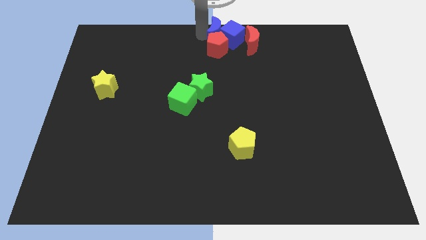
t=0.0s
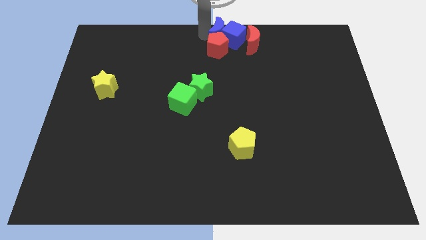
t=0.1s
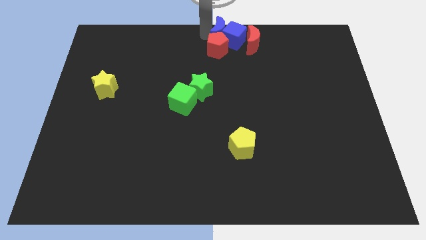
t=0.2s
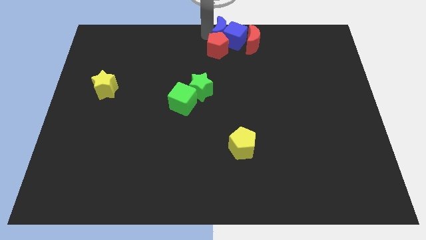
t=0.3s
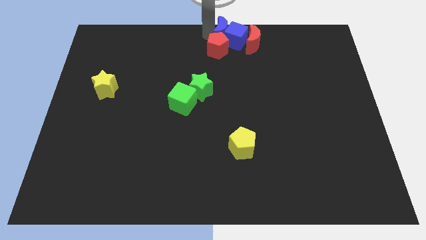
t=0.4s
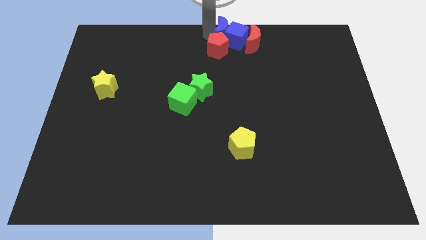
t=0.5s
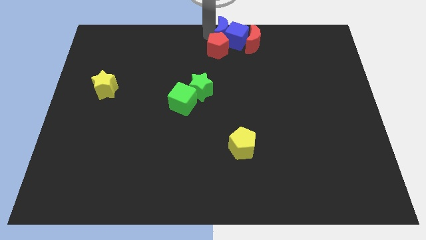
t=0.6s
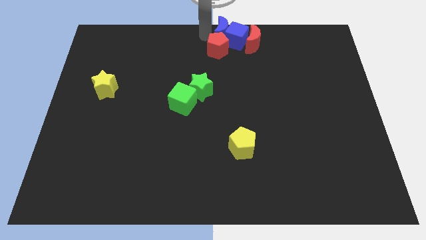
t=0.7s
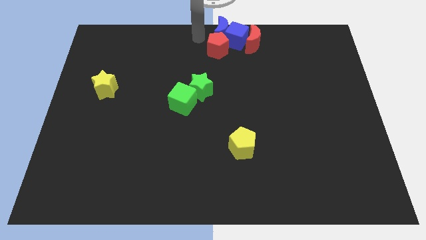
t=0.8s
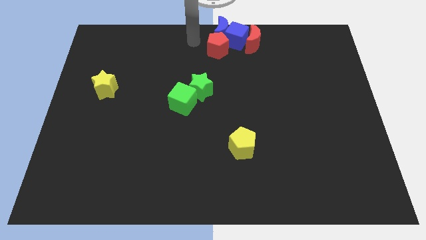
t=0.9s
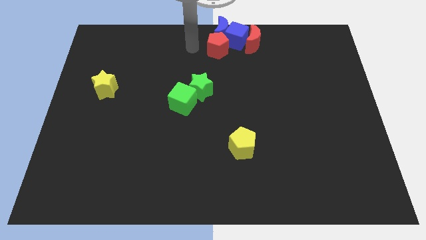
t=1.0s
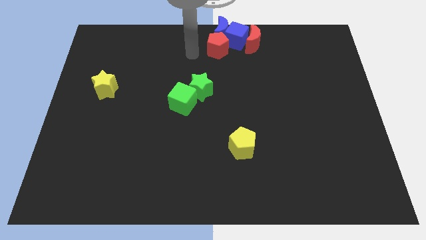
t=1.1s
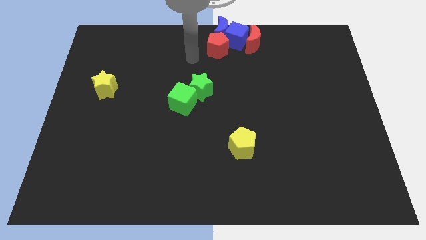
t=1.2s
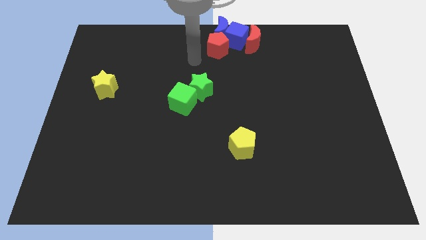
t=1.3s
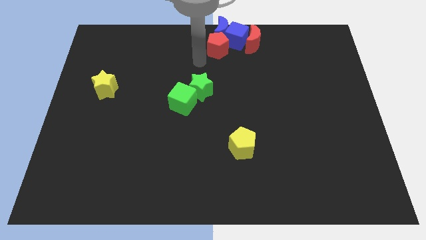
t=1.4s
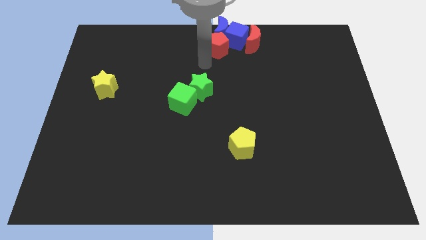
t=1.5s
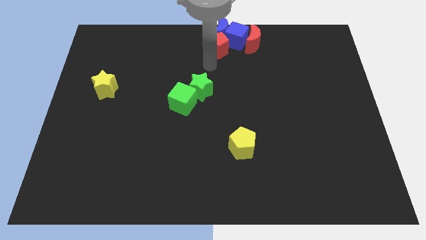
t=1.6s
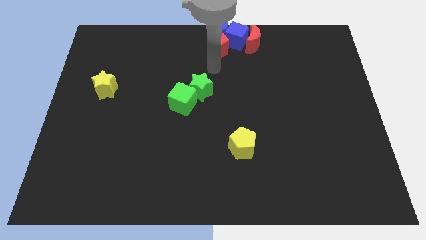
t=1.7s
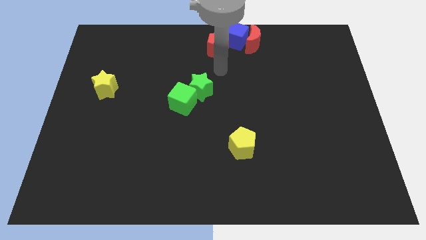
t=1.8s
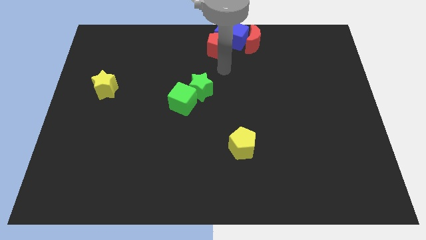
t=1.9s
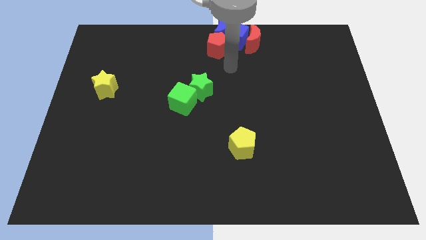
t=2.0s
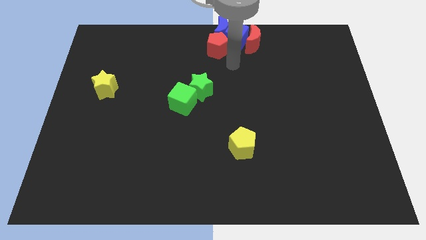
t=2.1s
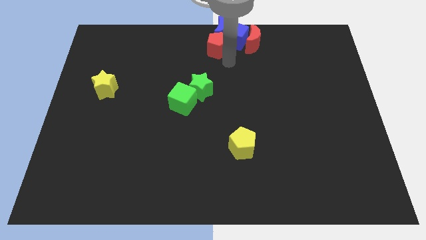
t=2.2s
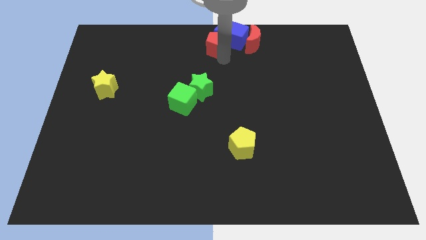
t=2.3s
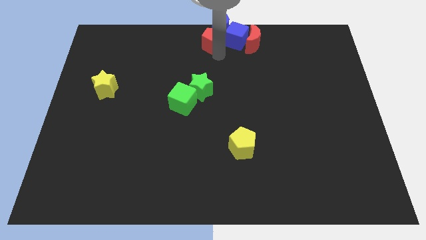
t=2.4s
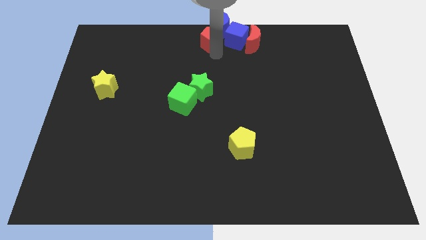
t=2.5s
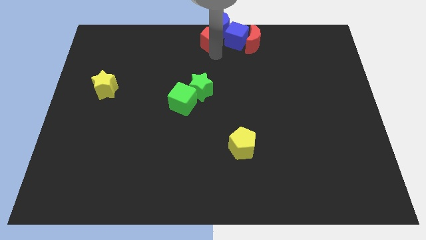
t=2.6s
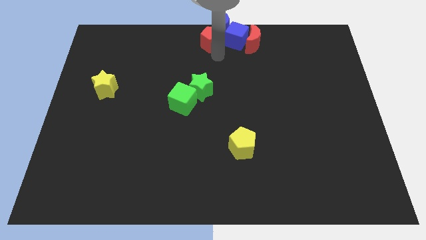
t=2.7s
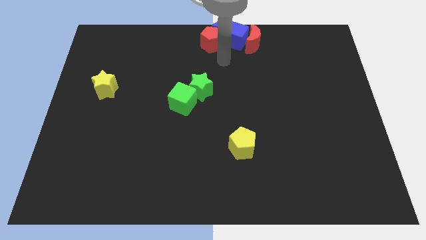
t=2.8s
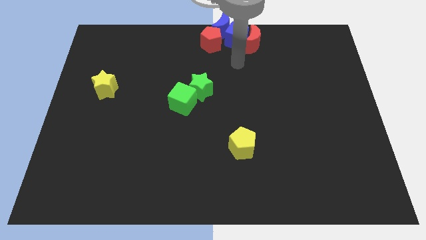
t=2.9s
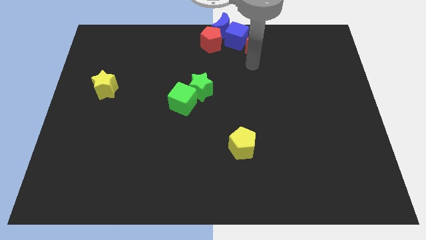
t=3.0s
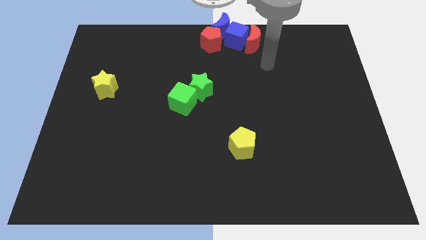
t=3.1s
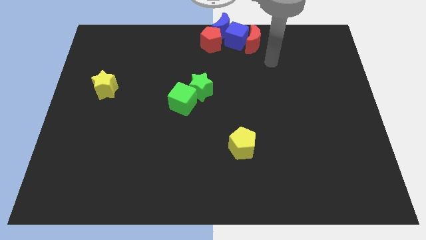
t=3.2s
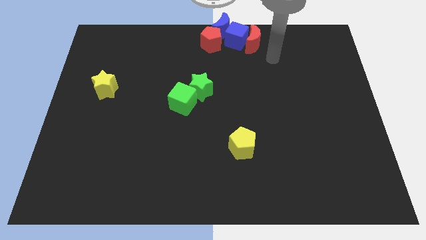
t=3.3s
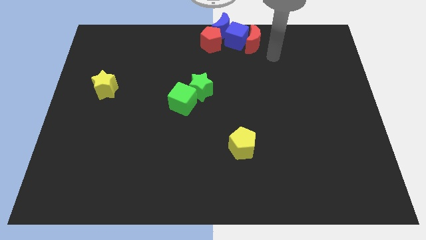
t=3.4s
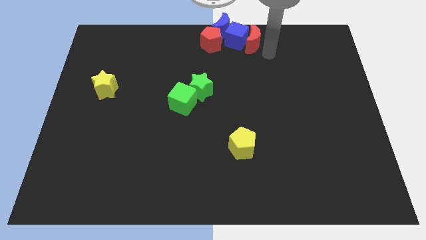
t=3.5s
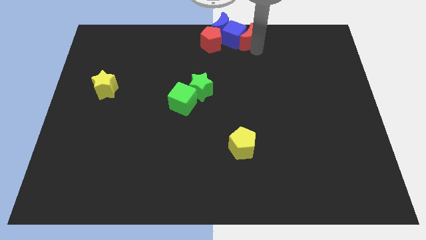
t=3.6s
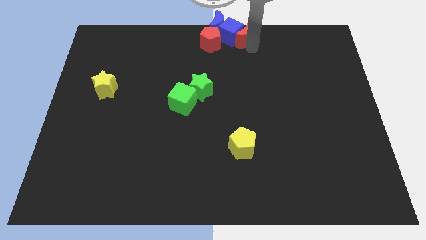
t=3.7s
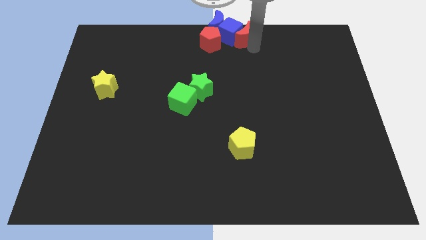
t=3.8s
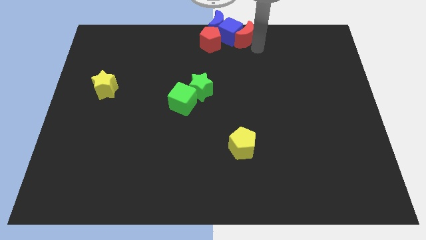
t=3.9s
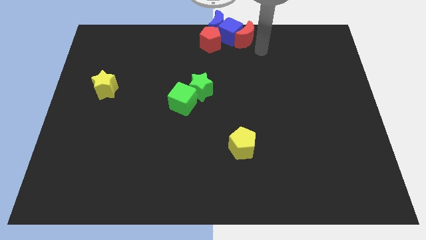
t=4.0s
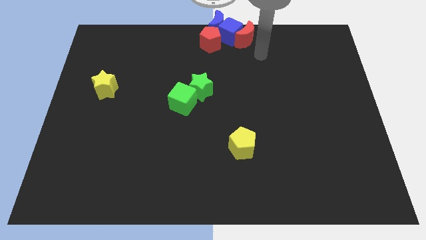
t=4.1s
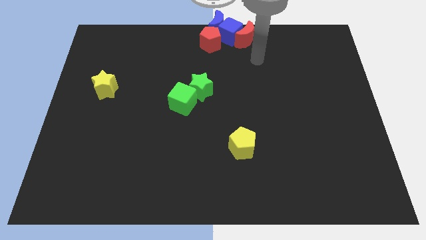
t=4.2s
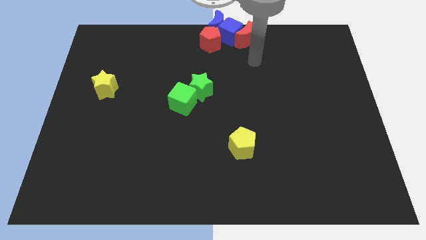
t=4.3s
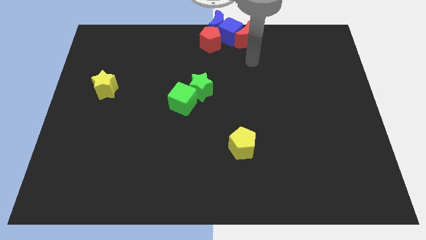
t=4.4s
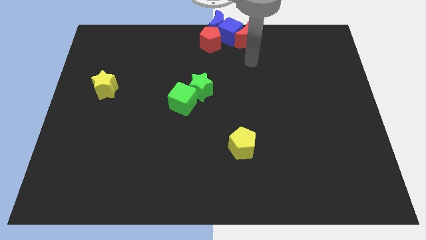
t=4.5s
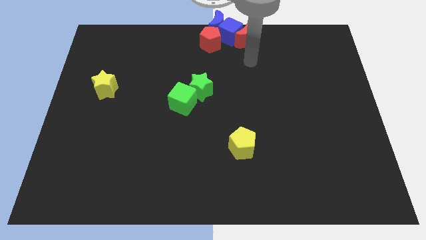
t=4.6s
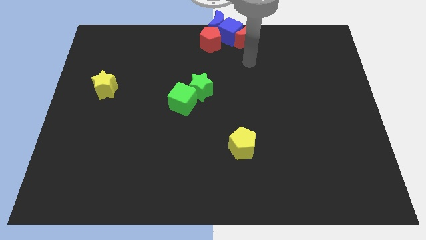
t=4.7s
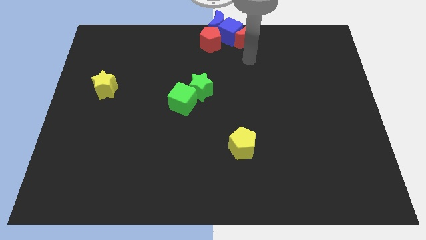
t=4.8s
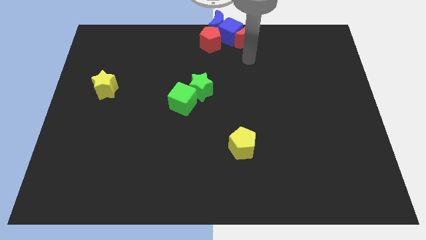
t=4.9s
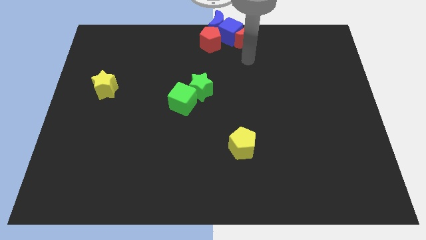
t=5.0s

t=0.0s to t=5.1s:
push the red crescent into the blue cube

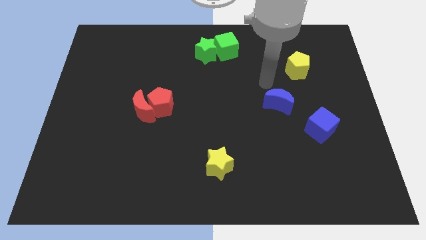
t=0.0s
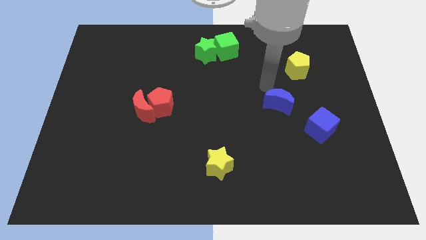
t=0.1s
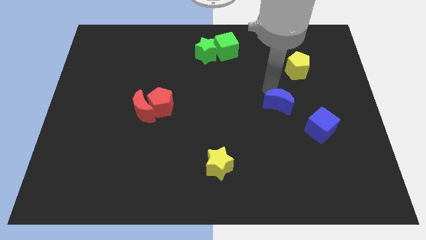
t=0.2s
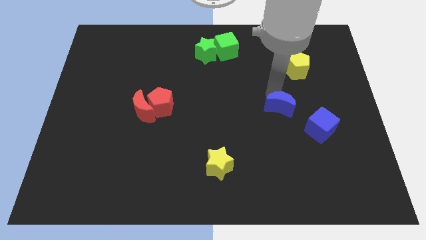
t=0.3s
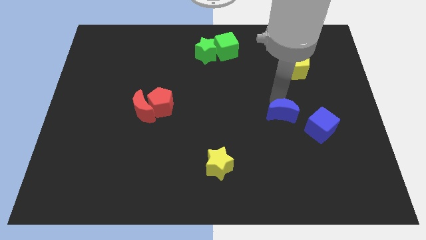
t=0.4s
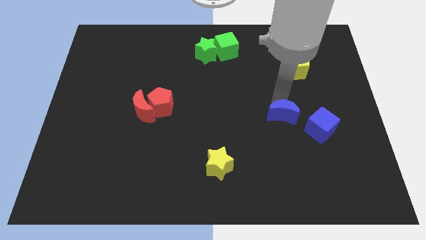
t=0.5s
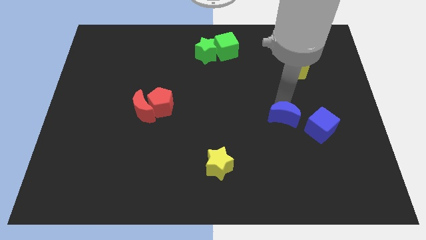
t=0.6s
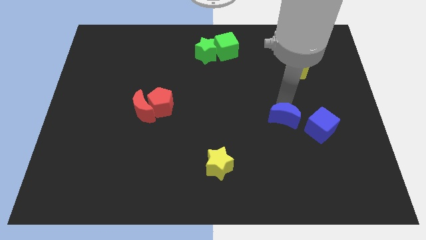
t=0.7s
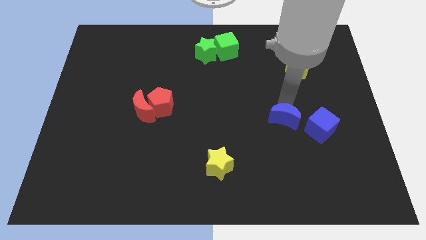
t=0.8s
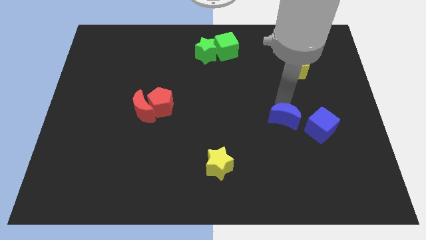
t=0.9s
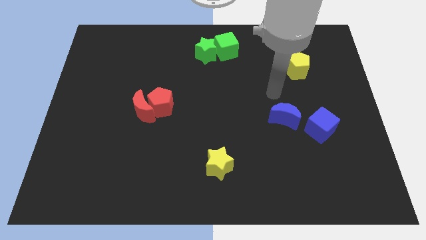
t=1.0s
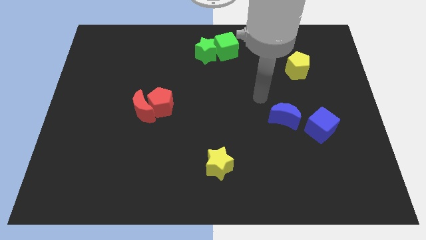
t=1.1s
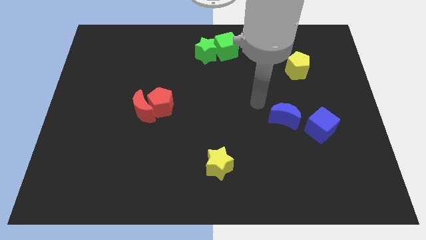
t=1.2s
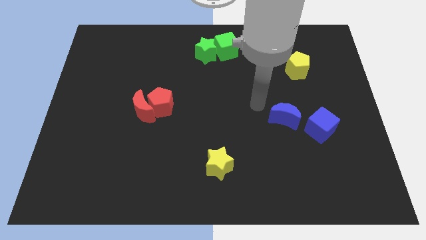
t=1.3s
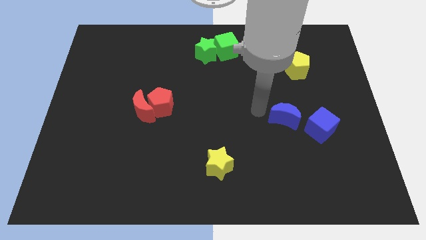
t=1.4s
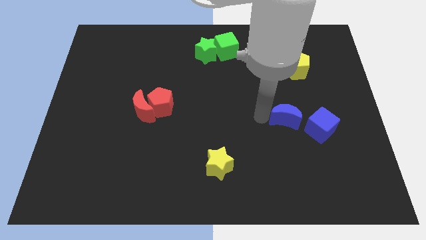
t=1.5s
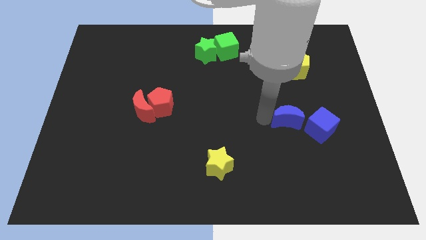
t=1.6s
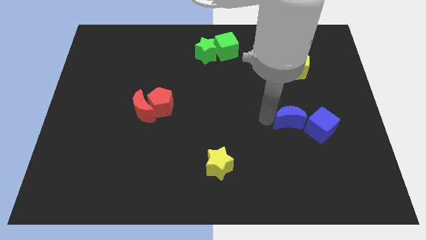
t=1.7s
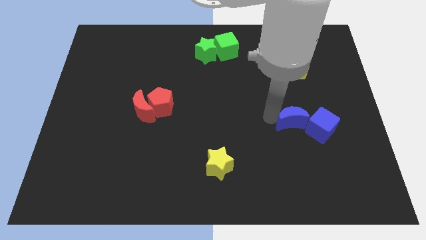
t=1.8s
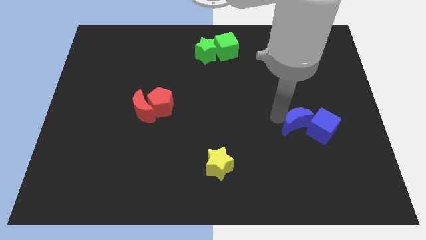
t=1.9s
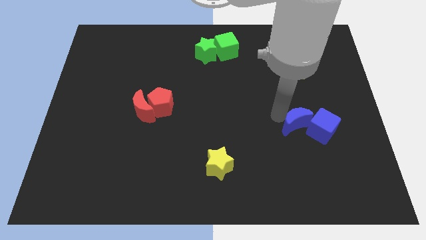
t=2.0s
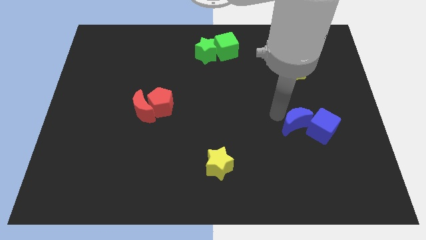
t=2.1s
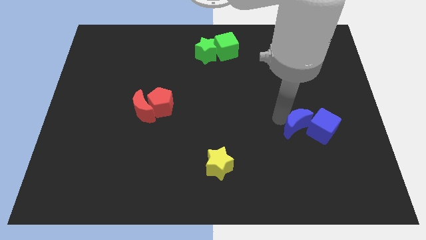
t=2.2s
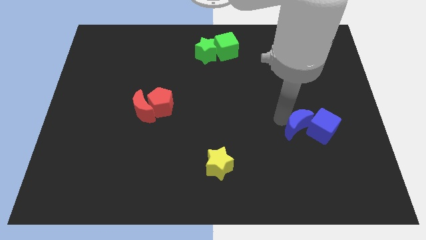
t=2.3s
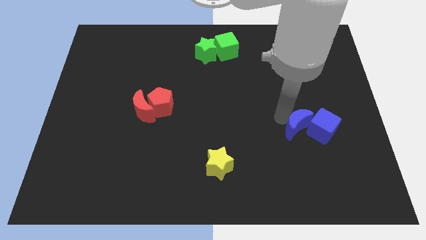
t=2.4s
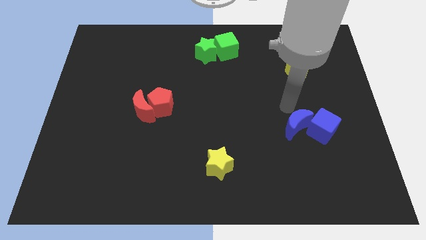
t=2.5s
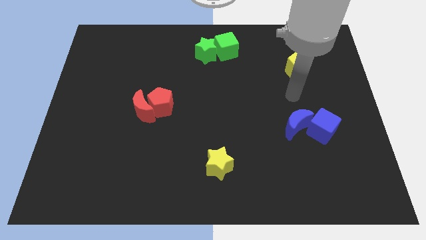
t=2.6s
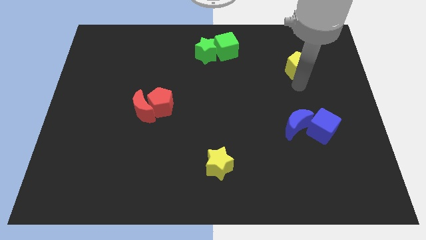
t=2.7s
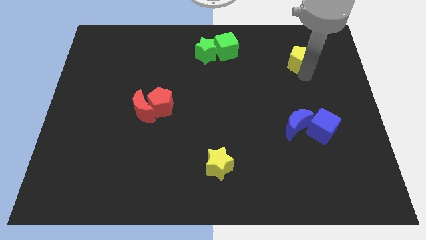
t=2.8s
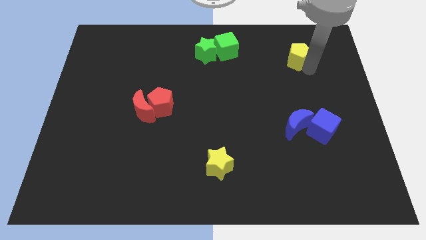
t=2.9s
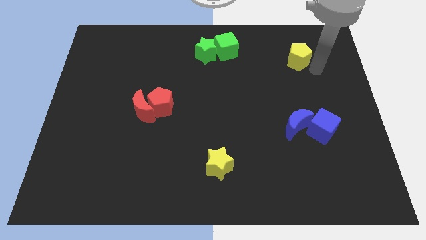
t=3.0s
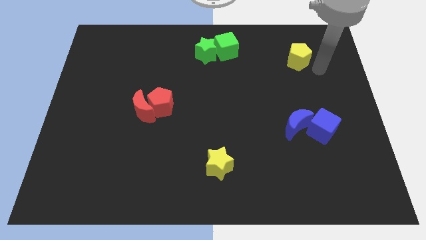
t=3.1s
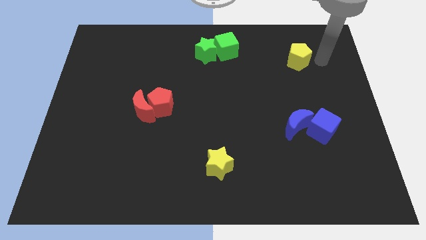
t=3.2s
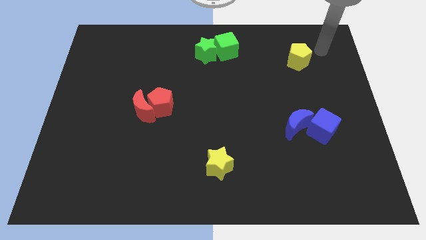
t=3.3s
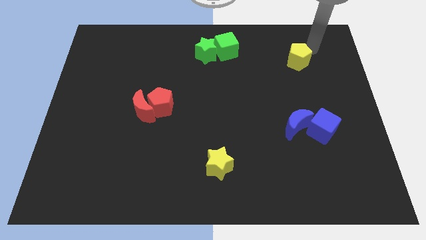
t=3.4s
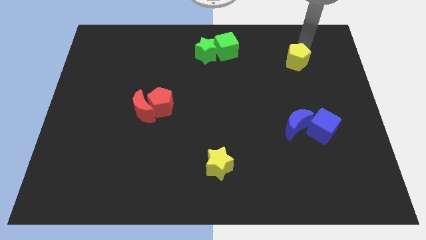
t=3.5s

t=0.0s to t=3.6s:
place the arm above the yellow pentagon

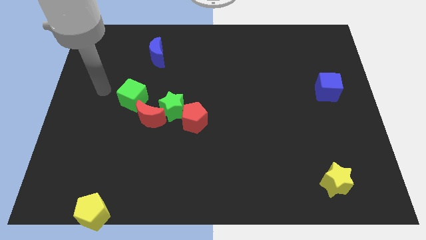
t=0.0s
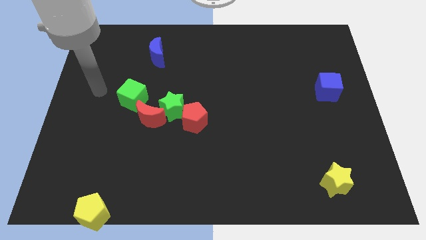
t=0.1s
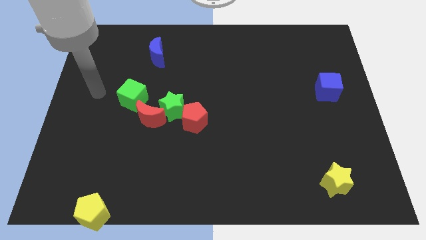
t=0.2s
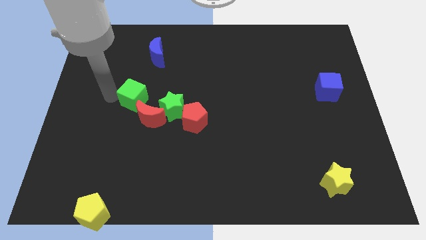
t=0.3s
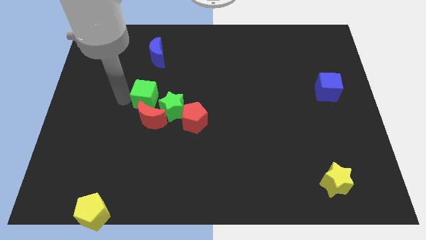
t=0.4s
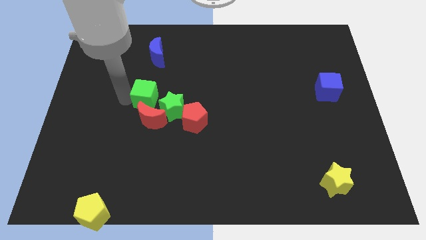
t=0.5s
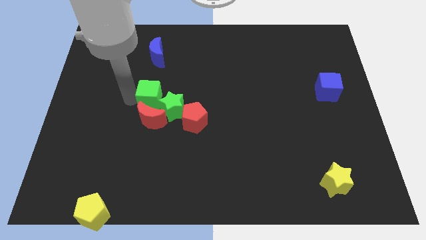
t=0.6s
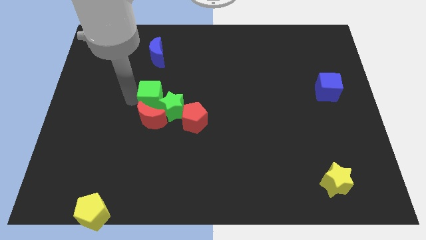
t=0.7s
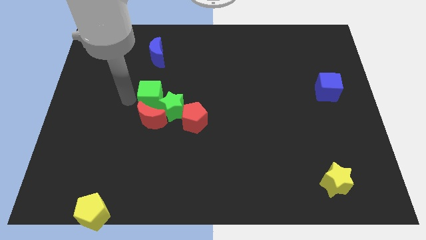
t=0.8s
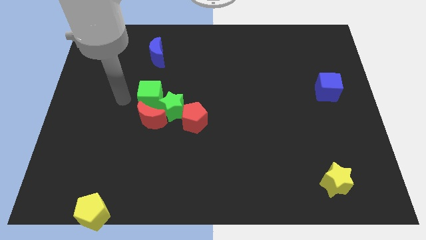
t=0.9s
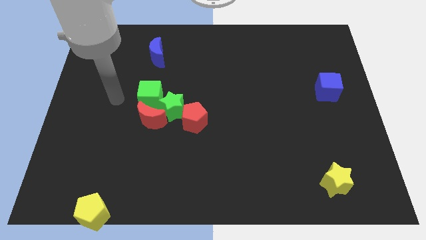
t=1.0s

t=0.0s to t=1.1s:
push green cube towards green star
